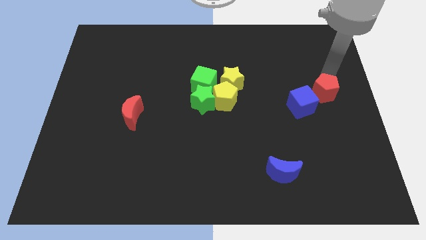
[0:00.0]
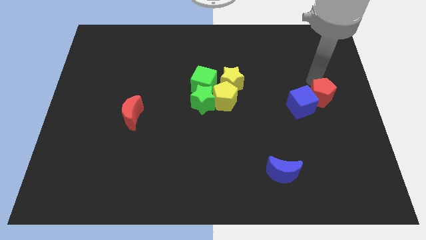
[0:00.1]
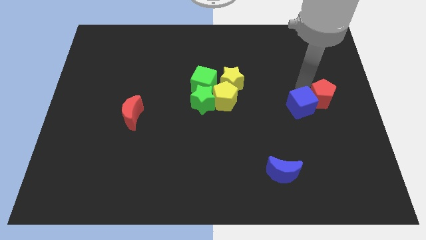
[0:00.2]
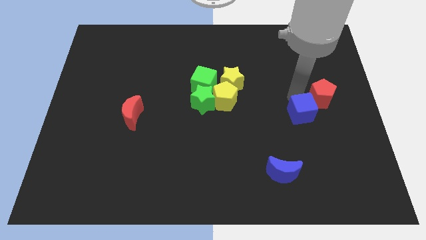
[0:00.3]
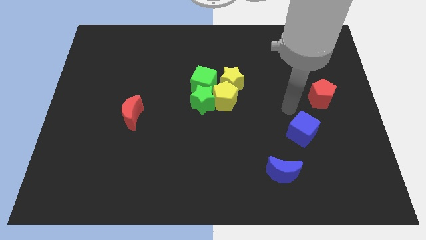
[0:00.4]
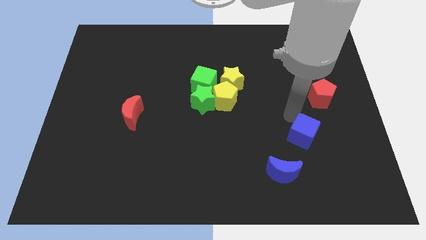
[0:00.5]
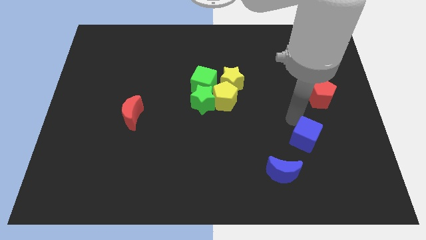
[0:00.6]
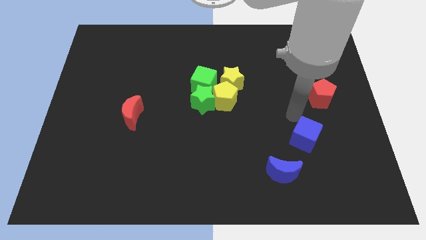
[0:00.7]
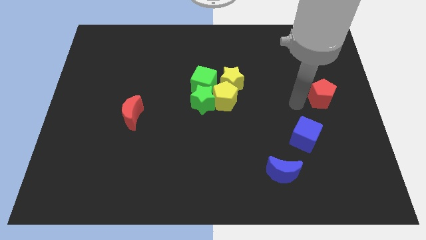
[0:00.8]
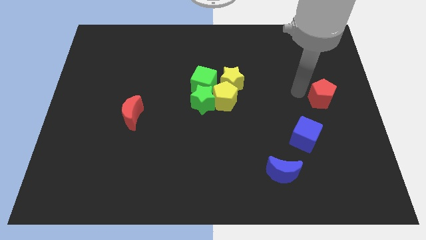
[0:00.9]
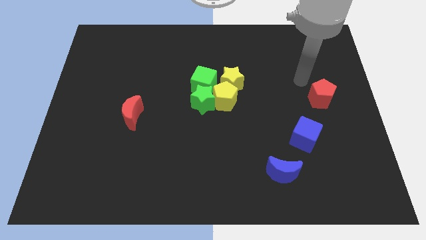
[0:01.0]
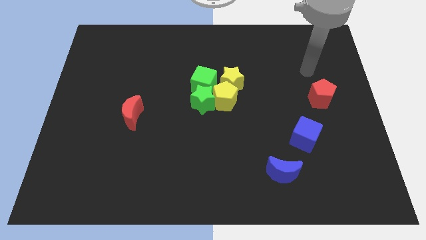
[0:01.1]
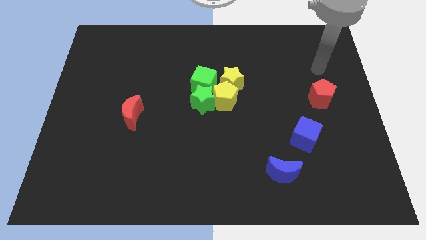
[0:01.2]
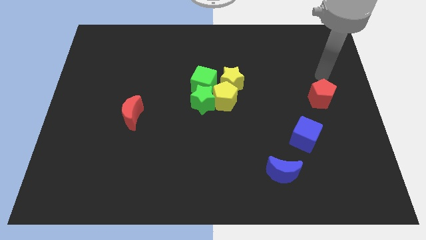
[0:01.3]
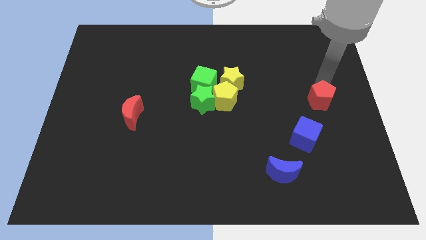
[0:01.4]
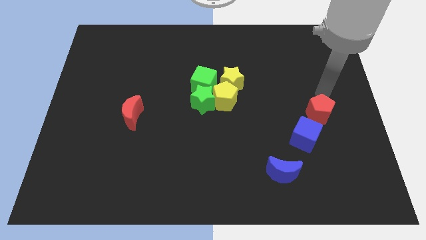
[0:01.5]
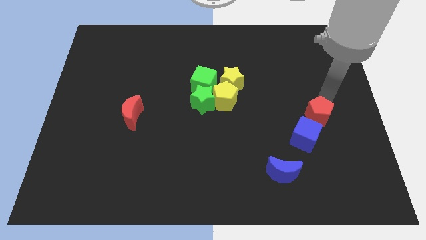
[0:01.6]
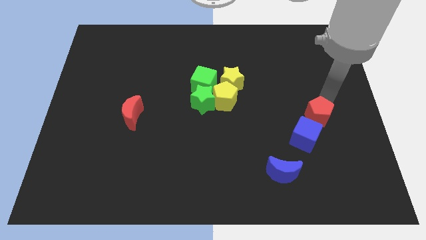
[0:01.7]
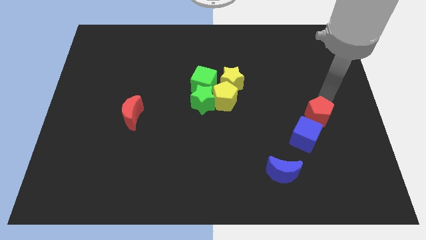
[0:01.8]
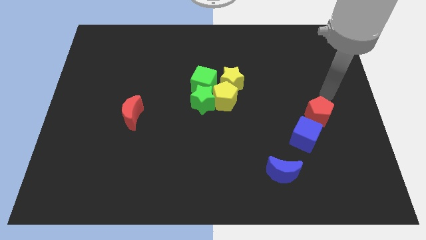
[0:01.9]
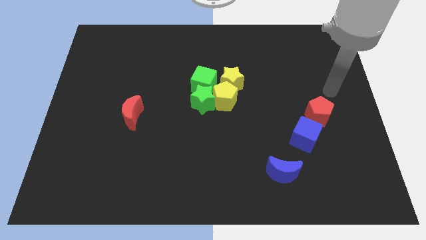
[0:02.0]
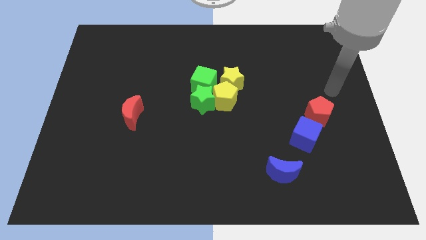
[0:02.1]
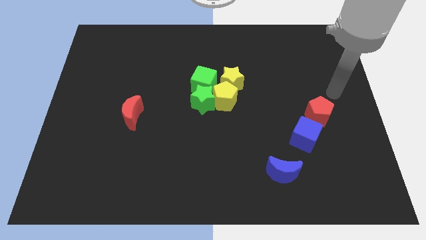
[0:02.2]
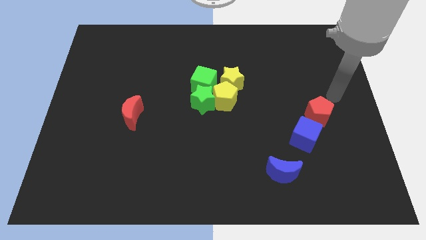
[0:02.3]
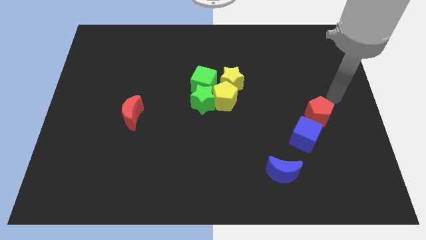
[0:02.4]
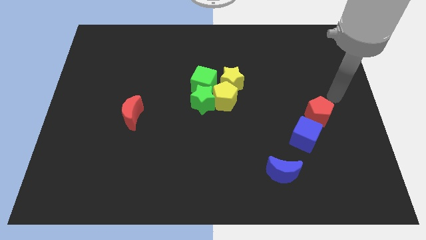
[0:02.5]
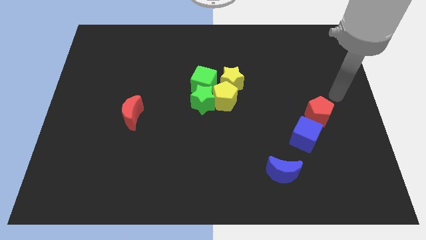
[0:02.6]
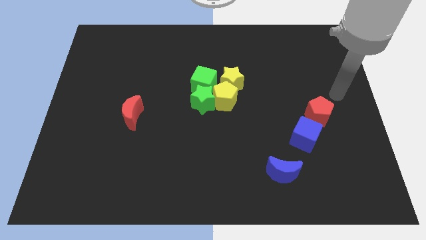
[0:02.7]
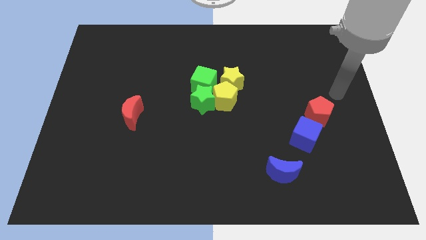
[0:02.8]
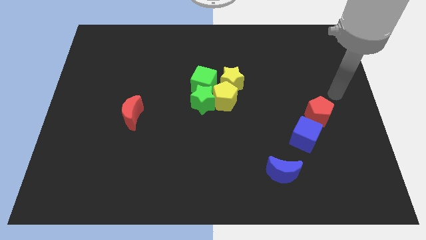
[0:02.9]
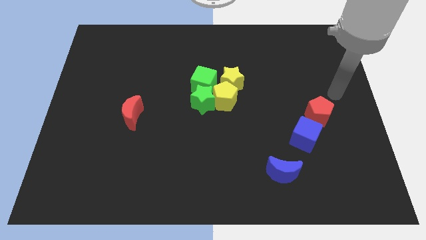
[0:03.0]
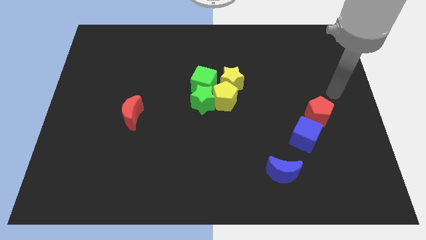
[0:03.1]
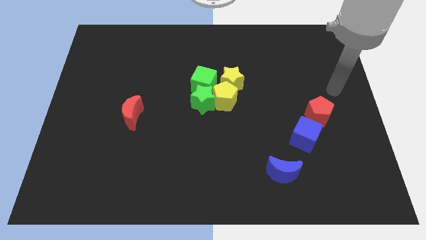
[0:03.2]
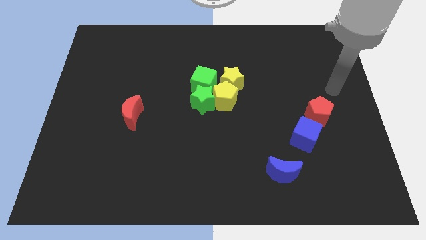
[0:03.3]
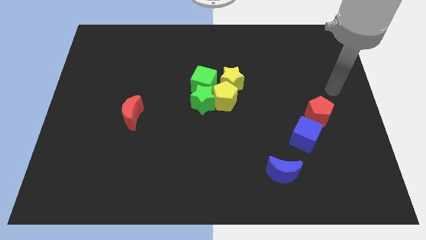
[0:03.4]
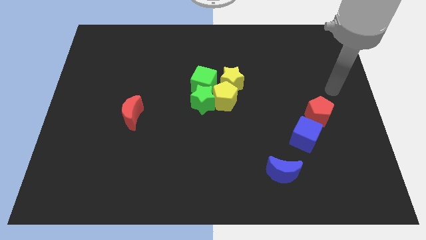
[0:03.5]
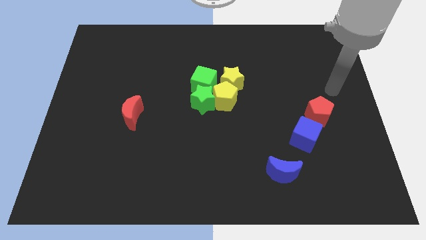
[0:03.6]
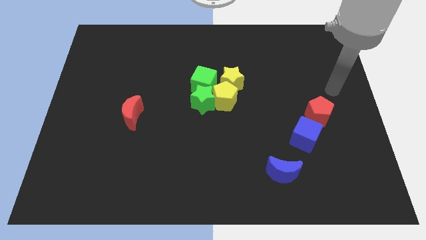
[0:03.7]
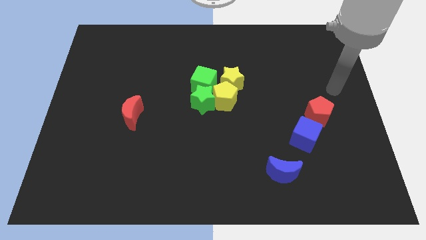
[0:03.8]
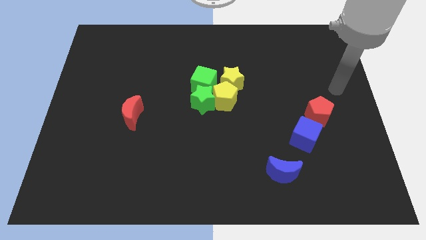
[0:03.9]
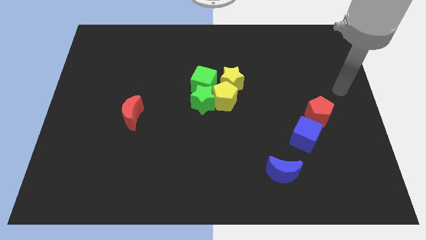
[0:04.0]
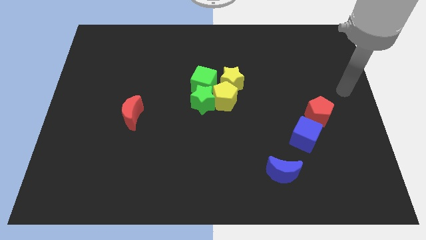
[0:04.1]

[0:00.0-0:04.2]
push the red pentagon into the blue cube

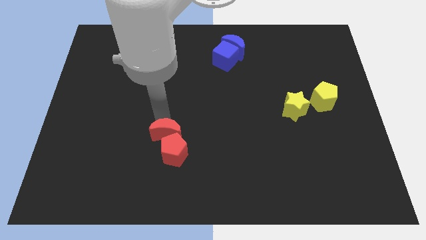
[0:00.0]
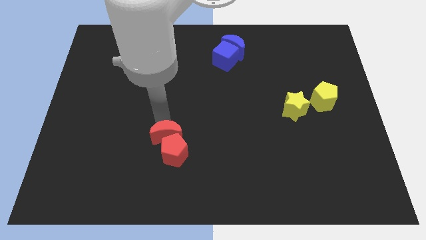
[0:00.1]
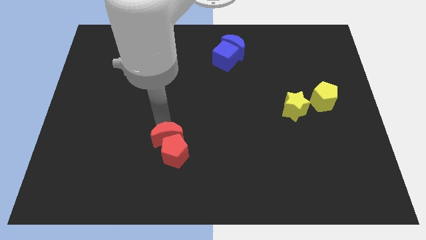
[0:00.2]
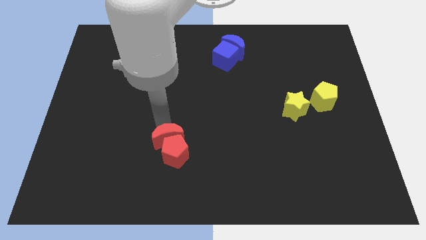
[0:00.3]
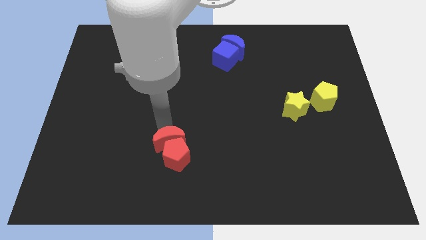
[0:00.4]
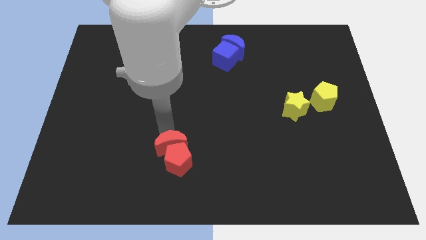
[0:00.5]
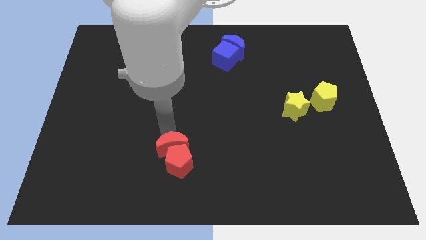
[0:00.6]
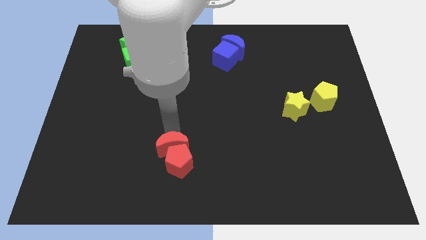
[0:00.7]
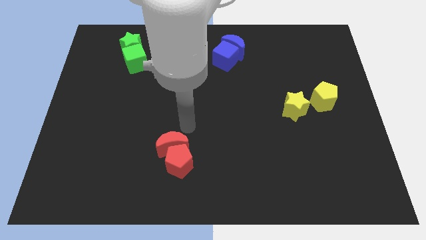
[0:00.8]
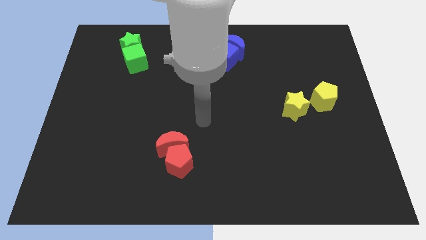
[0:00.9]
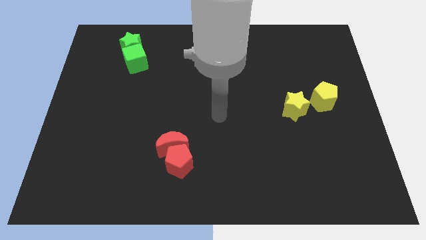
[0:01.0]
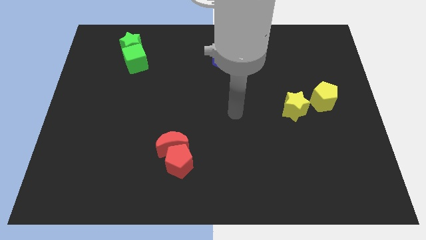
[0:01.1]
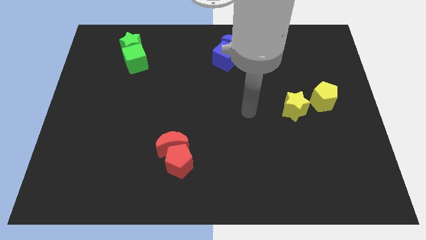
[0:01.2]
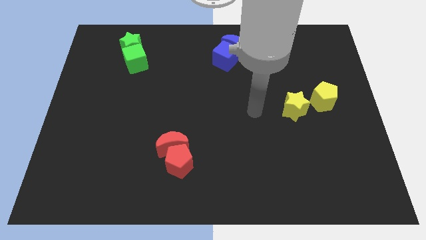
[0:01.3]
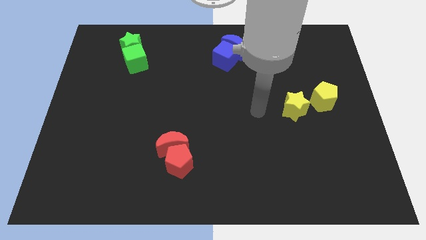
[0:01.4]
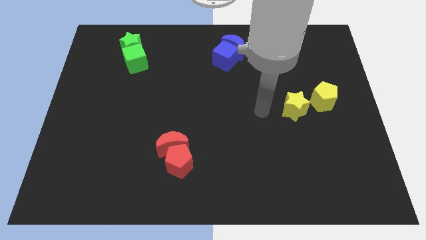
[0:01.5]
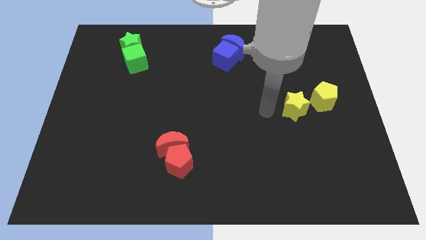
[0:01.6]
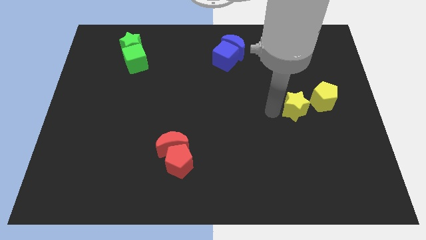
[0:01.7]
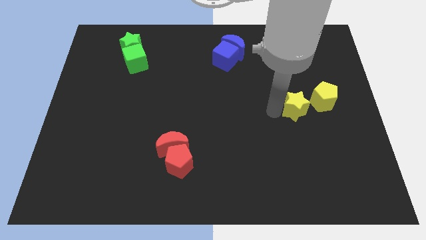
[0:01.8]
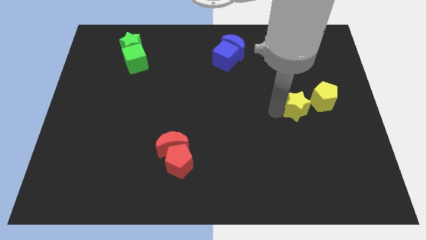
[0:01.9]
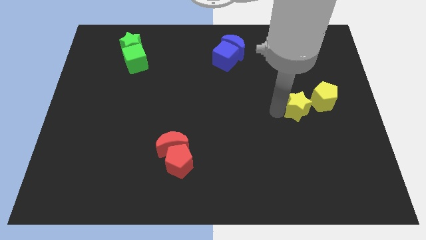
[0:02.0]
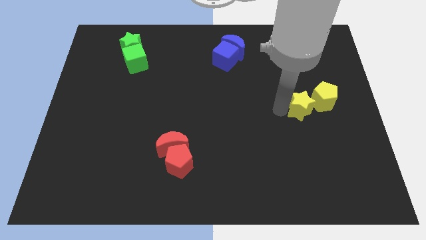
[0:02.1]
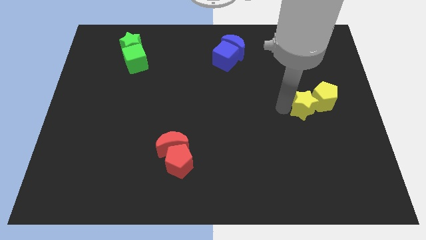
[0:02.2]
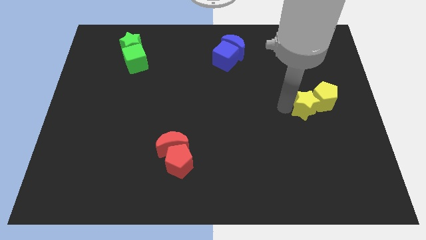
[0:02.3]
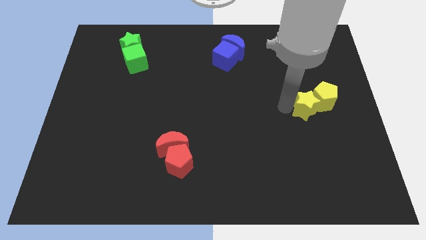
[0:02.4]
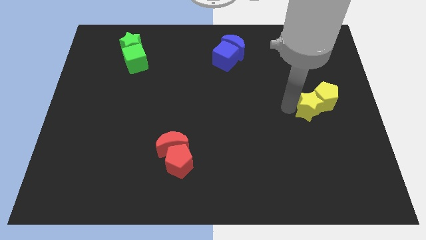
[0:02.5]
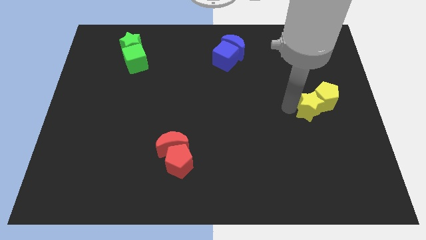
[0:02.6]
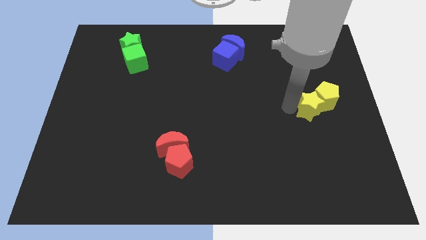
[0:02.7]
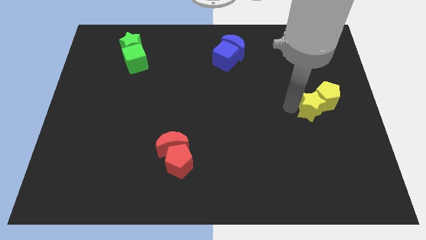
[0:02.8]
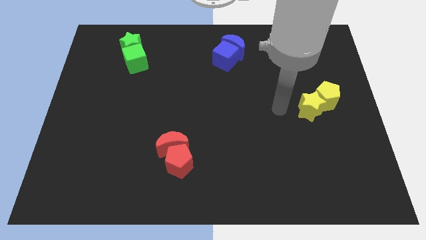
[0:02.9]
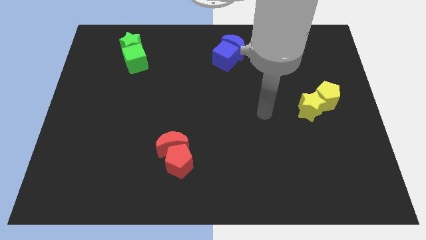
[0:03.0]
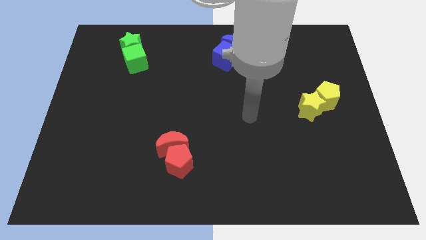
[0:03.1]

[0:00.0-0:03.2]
push yellow star towards yellow pentagon

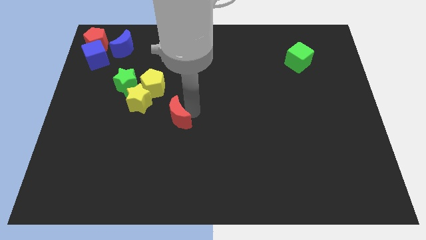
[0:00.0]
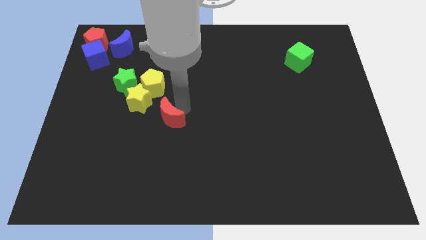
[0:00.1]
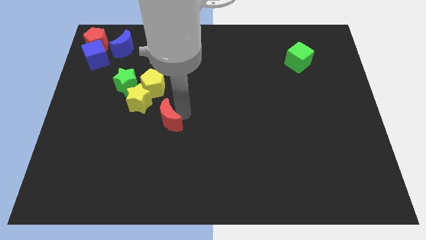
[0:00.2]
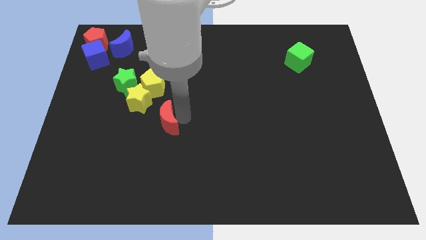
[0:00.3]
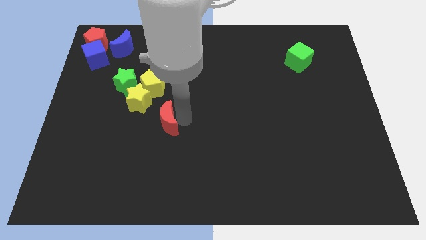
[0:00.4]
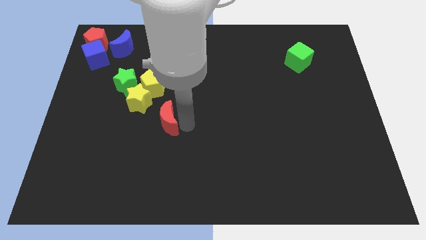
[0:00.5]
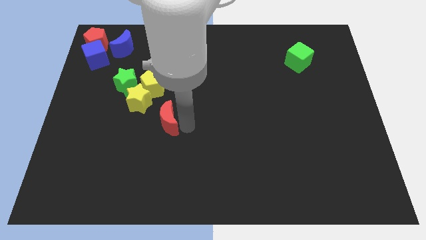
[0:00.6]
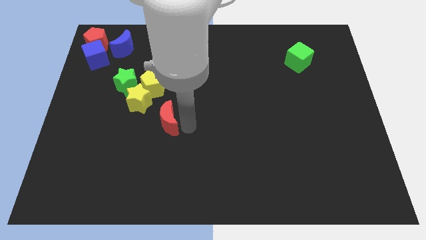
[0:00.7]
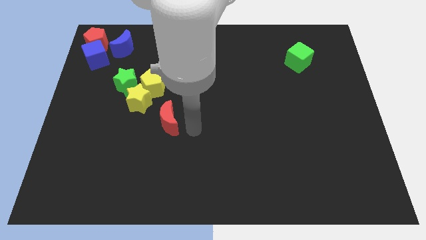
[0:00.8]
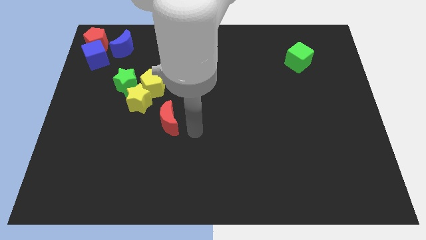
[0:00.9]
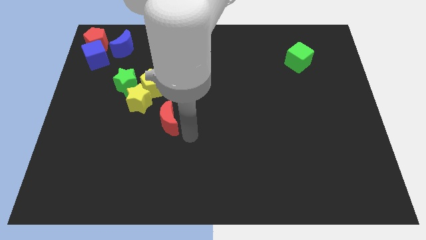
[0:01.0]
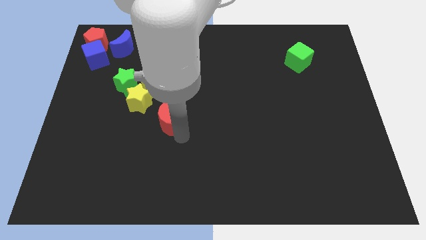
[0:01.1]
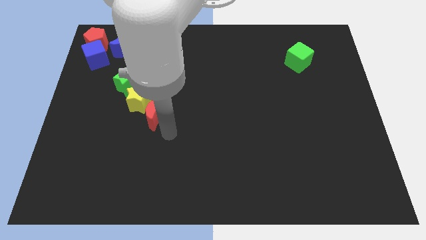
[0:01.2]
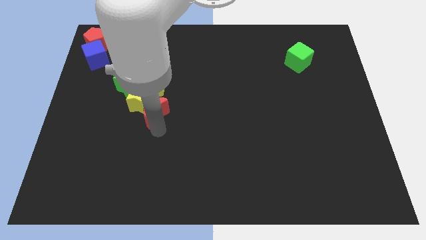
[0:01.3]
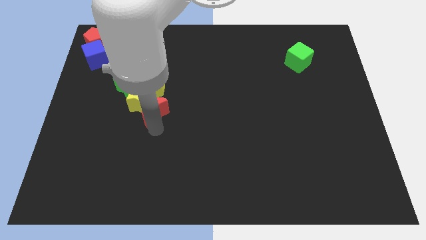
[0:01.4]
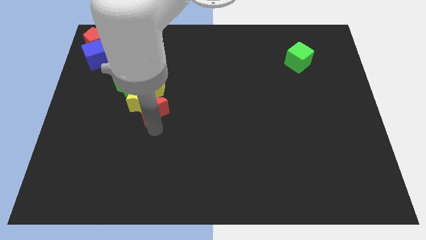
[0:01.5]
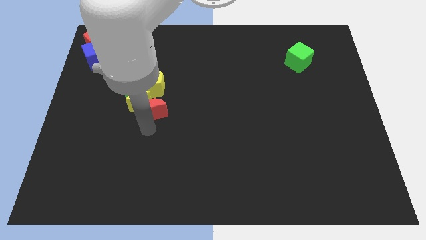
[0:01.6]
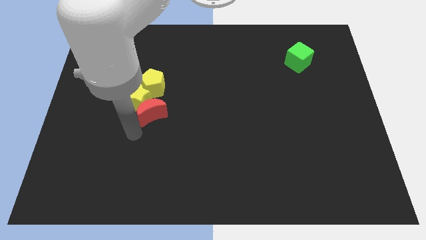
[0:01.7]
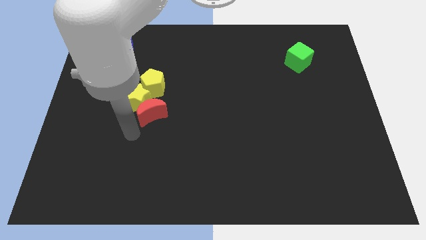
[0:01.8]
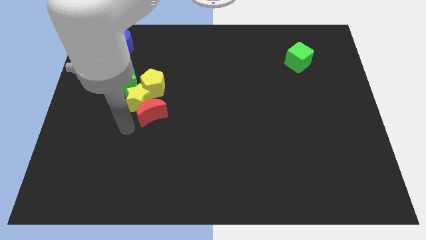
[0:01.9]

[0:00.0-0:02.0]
place the red moon below the yellow star
